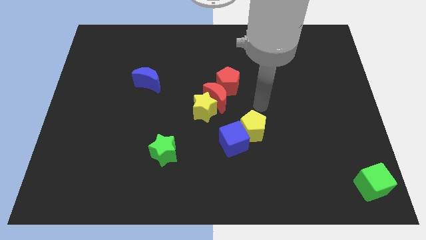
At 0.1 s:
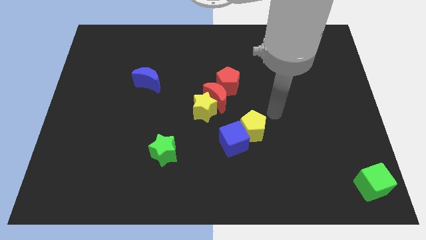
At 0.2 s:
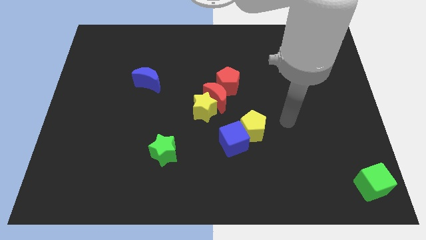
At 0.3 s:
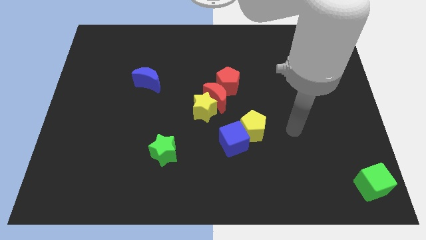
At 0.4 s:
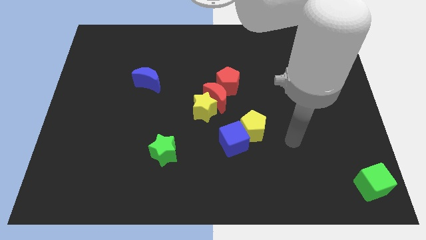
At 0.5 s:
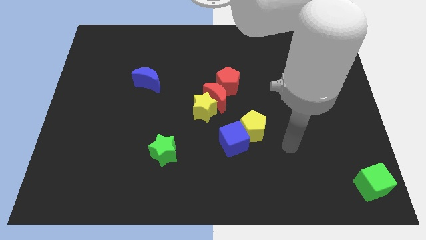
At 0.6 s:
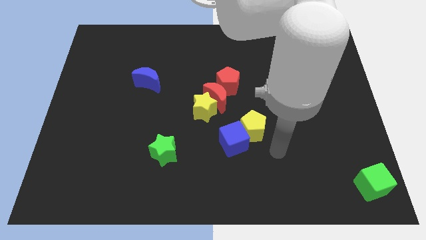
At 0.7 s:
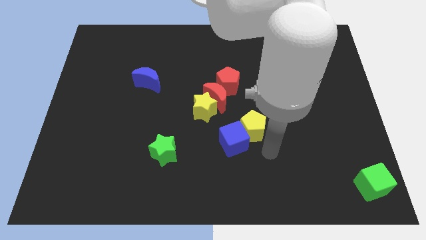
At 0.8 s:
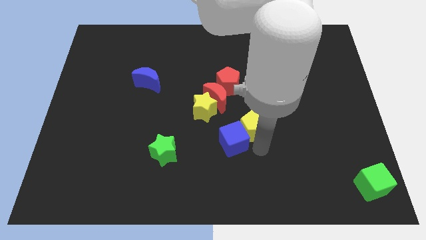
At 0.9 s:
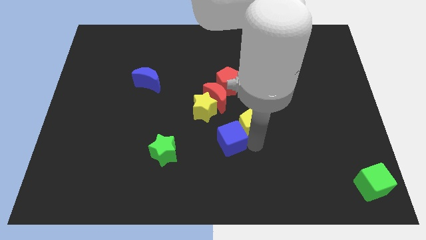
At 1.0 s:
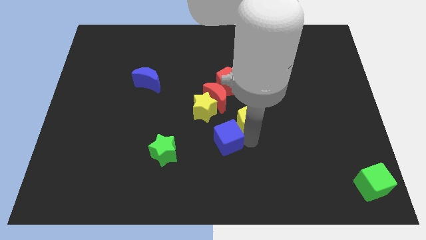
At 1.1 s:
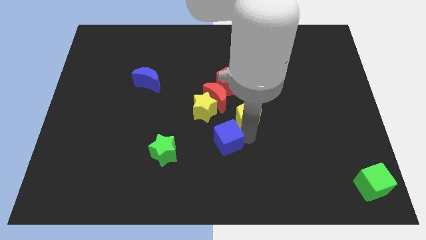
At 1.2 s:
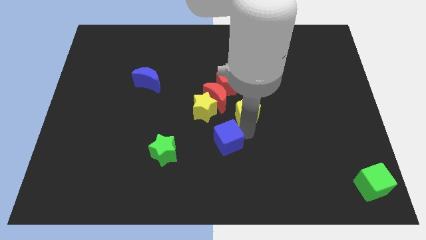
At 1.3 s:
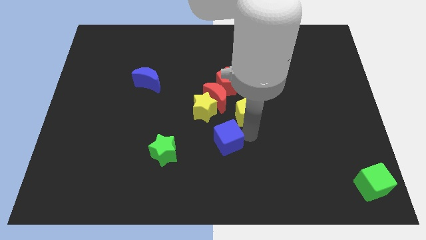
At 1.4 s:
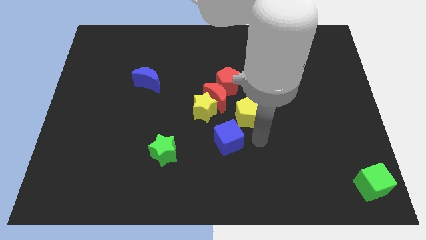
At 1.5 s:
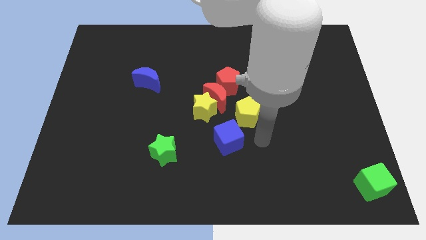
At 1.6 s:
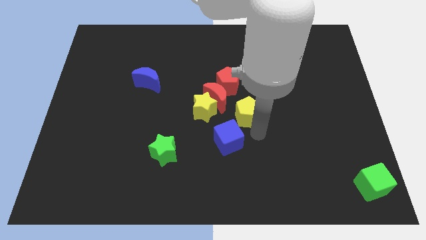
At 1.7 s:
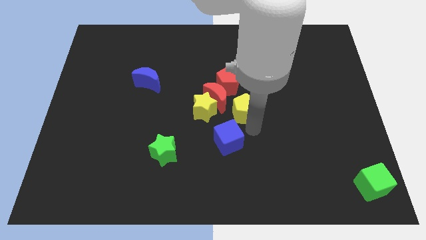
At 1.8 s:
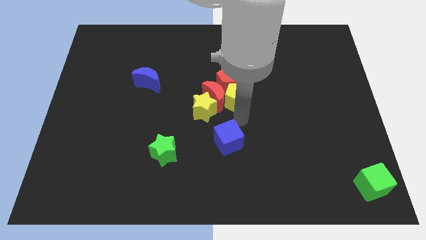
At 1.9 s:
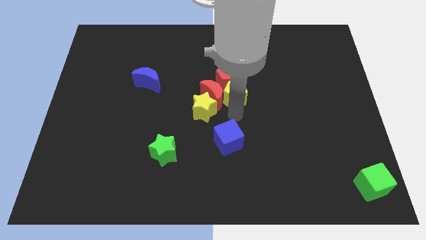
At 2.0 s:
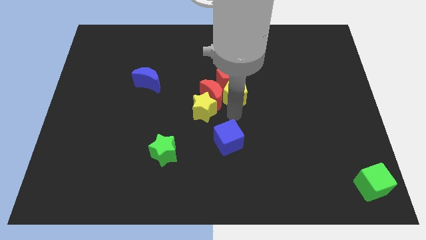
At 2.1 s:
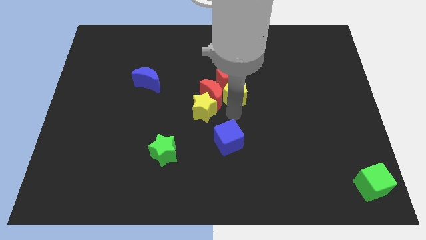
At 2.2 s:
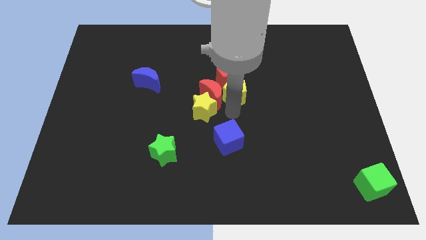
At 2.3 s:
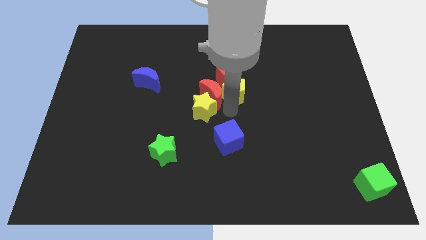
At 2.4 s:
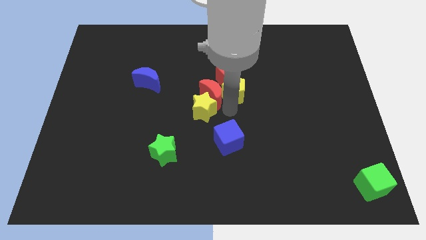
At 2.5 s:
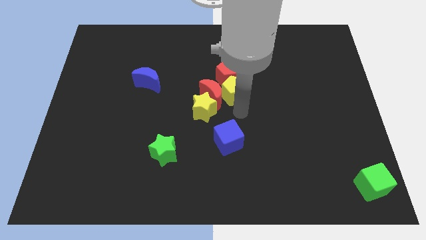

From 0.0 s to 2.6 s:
push the yellow pentagon into the red pentagon

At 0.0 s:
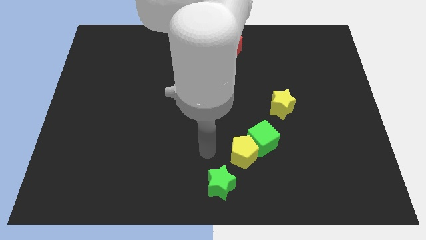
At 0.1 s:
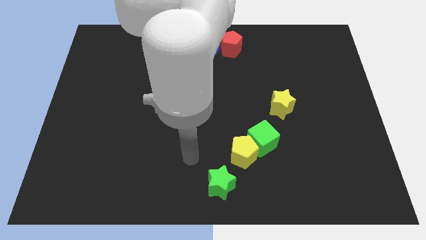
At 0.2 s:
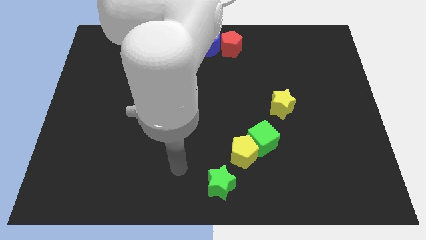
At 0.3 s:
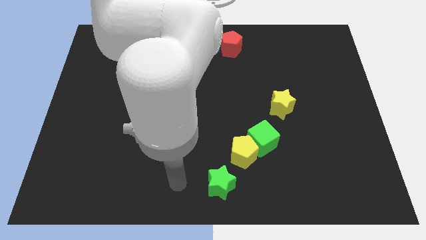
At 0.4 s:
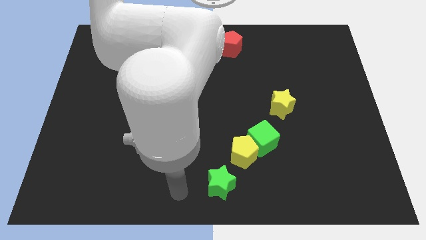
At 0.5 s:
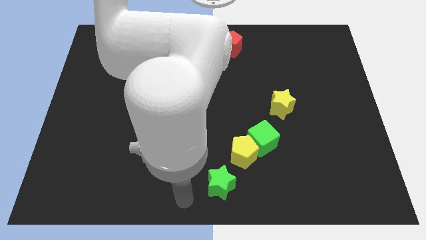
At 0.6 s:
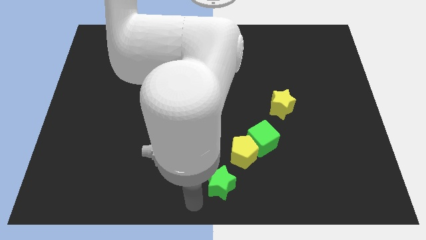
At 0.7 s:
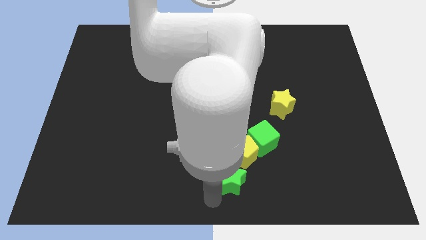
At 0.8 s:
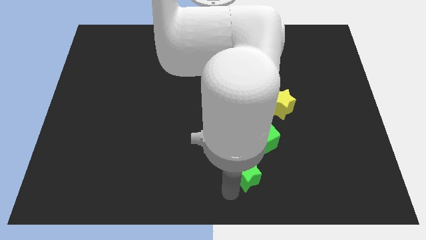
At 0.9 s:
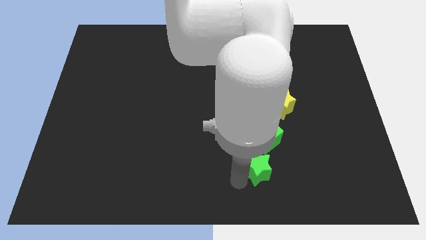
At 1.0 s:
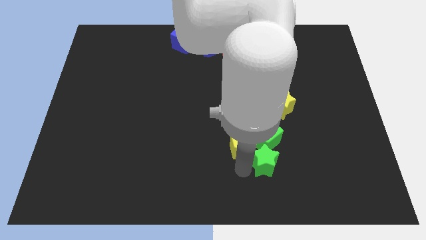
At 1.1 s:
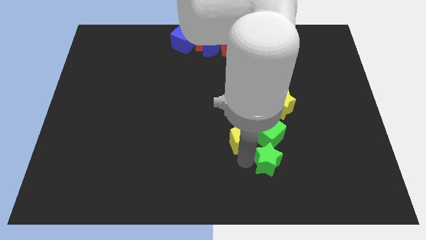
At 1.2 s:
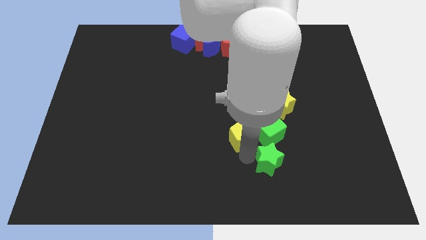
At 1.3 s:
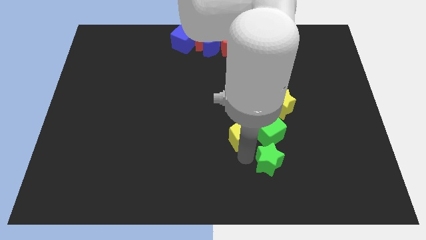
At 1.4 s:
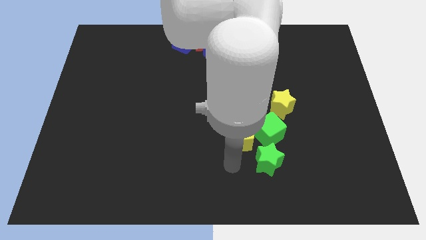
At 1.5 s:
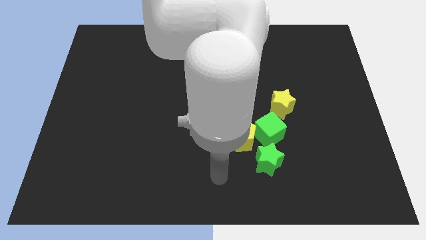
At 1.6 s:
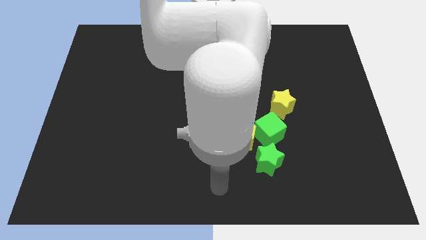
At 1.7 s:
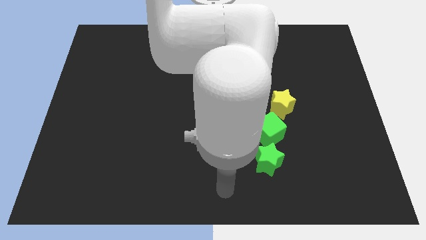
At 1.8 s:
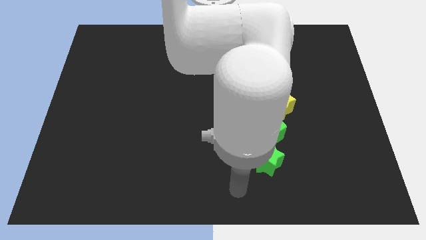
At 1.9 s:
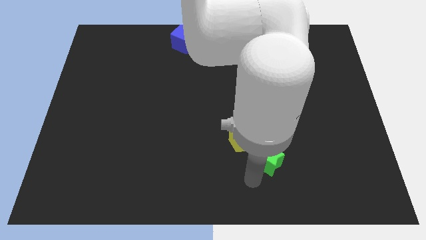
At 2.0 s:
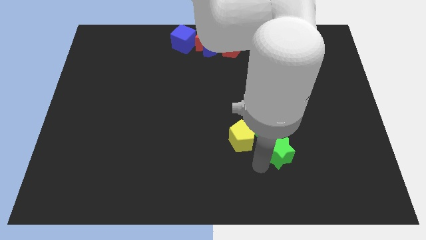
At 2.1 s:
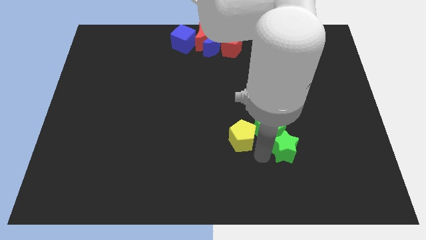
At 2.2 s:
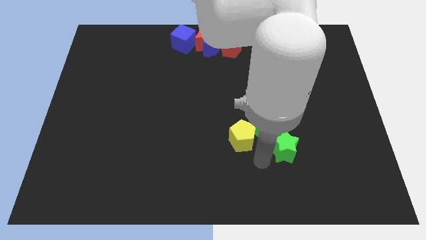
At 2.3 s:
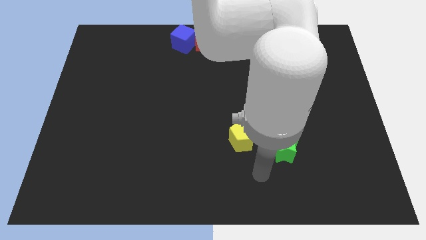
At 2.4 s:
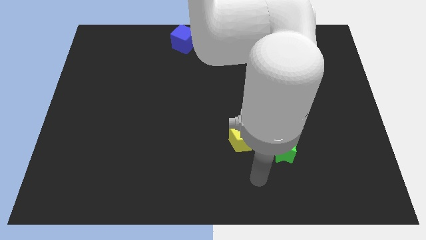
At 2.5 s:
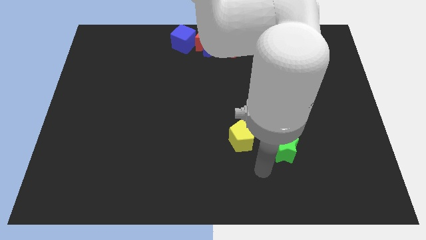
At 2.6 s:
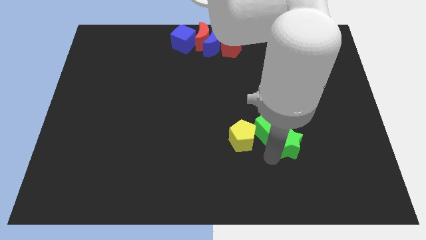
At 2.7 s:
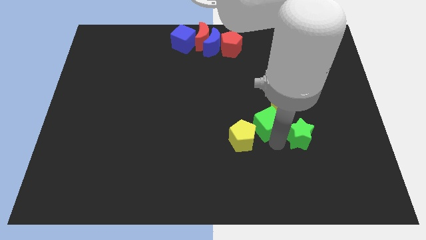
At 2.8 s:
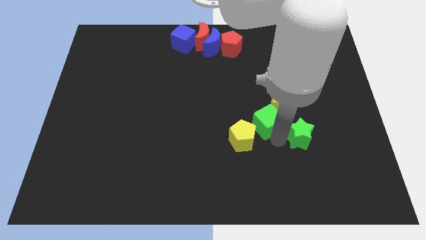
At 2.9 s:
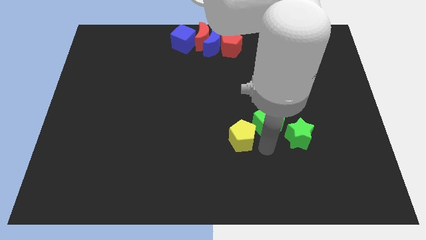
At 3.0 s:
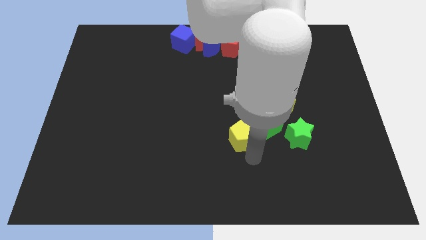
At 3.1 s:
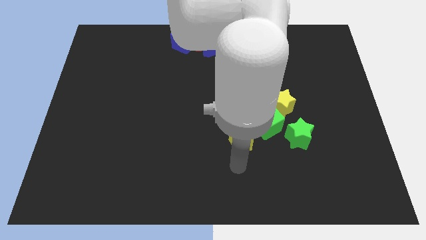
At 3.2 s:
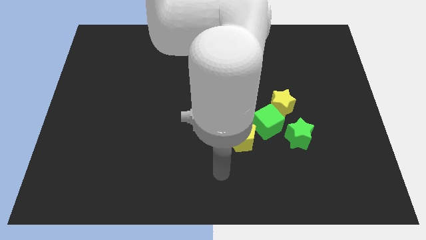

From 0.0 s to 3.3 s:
push green star into group of blocks

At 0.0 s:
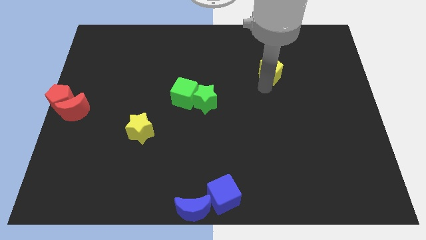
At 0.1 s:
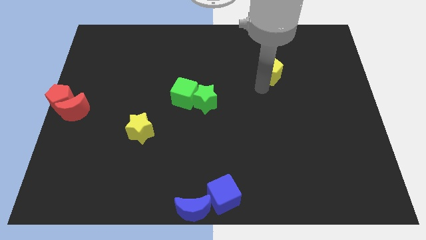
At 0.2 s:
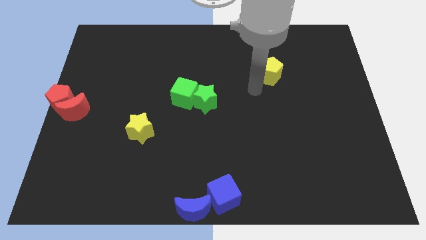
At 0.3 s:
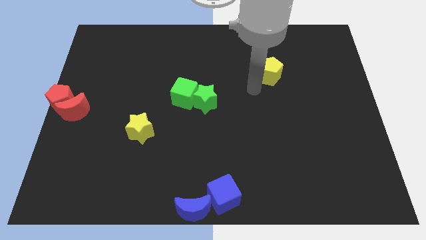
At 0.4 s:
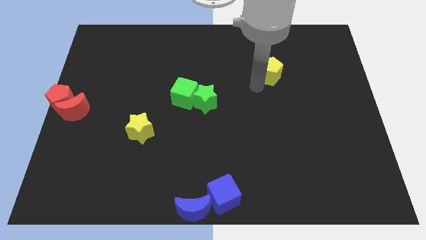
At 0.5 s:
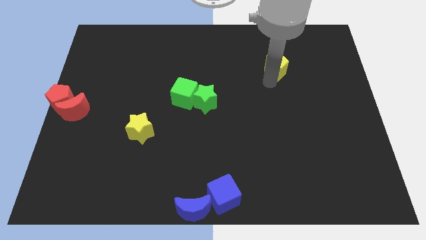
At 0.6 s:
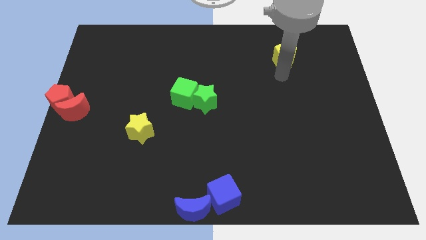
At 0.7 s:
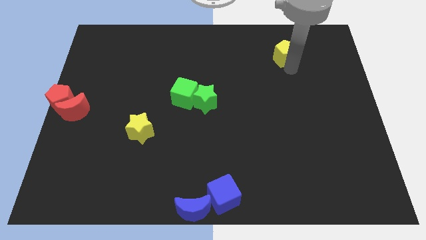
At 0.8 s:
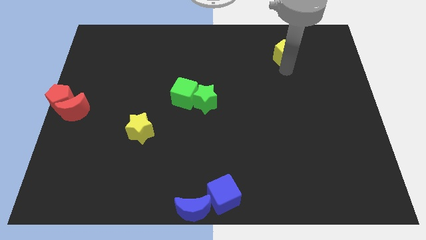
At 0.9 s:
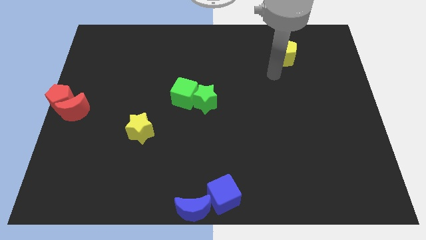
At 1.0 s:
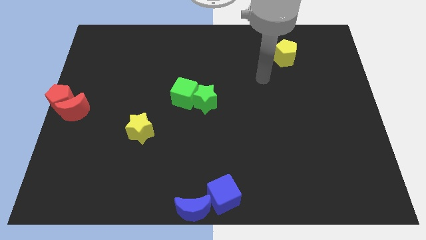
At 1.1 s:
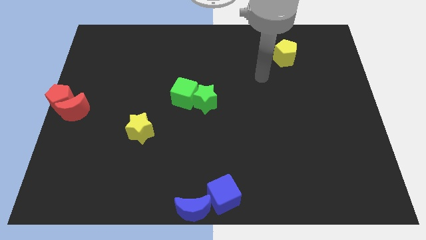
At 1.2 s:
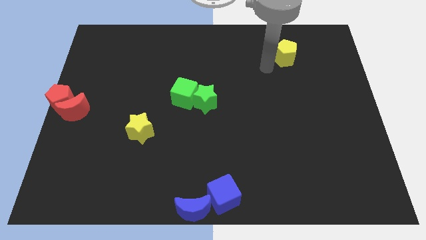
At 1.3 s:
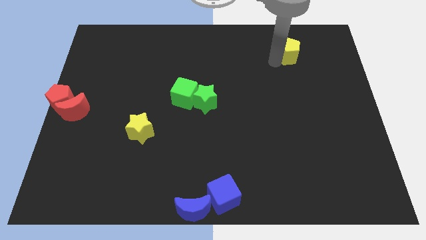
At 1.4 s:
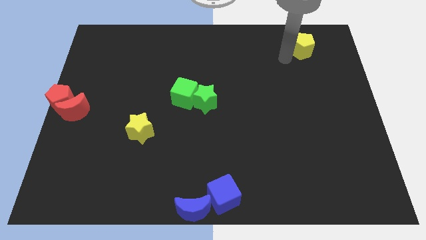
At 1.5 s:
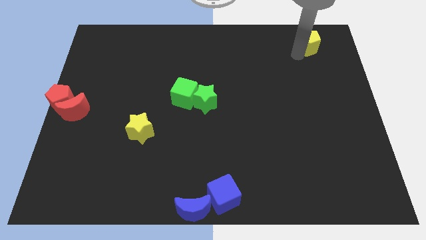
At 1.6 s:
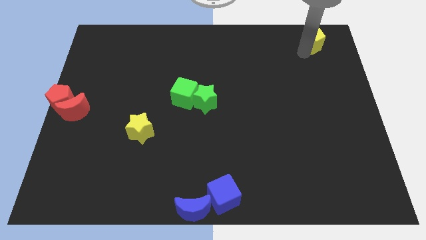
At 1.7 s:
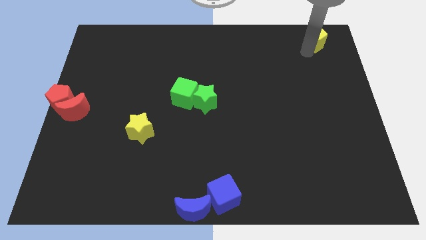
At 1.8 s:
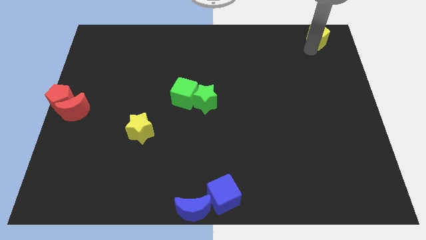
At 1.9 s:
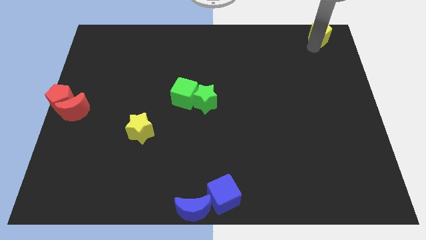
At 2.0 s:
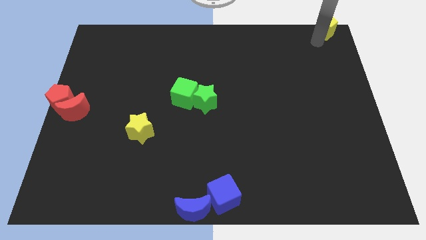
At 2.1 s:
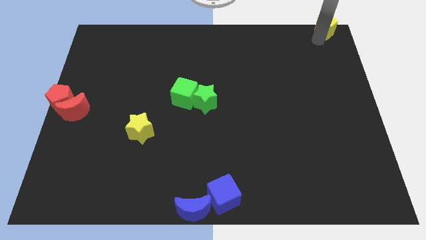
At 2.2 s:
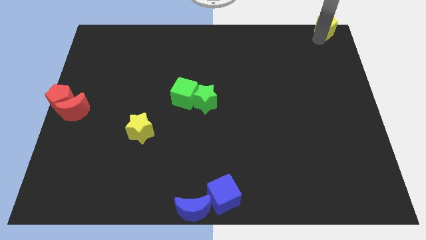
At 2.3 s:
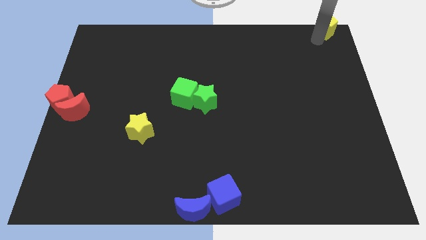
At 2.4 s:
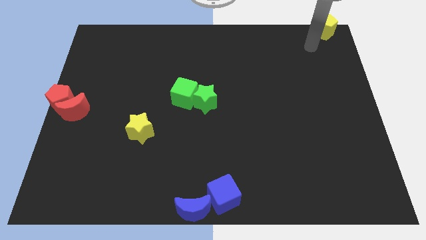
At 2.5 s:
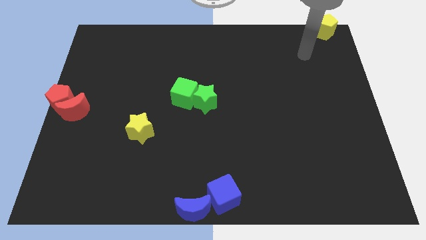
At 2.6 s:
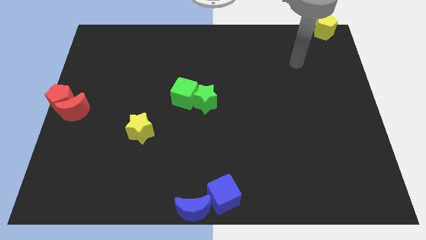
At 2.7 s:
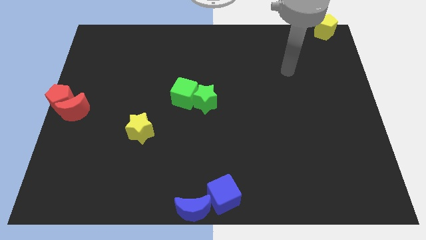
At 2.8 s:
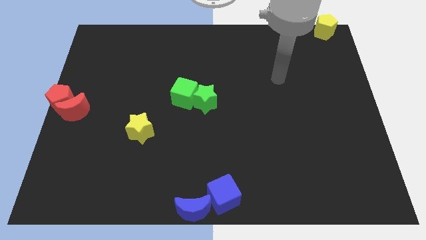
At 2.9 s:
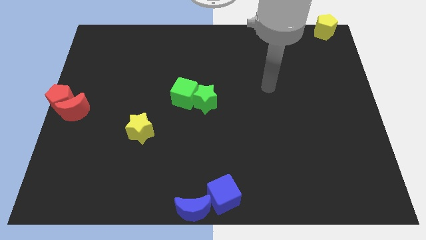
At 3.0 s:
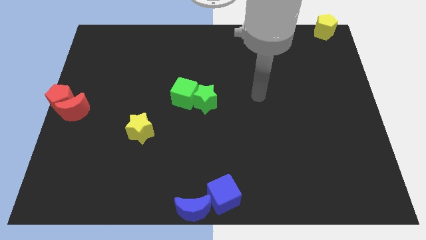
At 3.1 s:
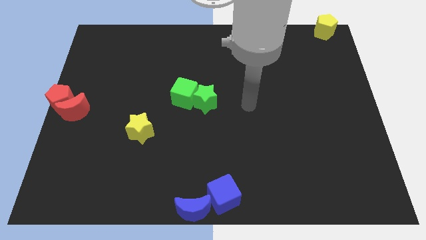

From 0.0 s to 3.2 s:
push the yellow pentagon to the top right corner of the board

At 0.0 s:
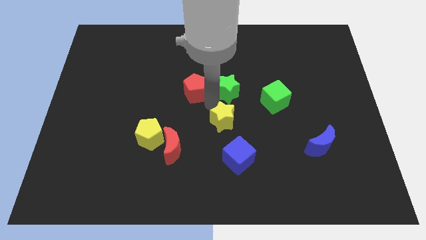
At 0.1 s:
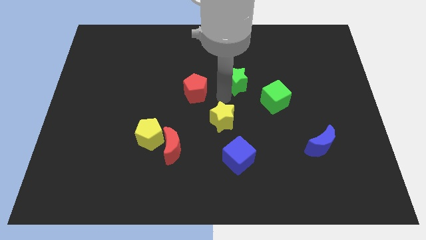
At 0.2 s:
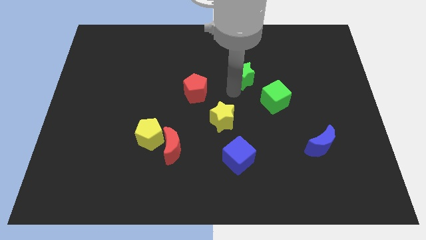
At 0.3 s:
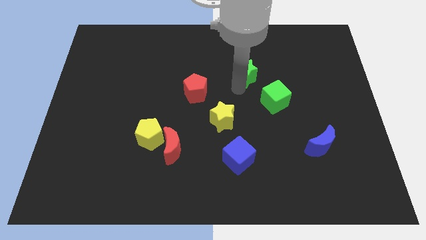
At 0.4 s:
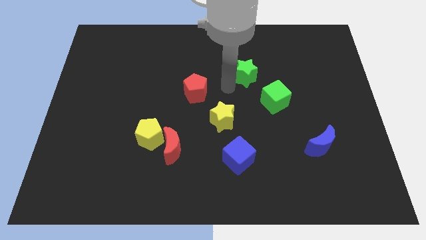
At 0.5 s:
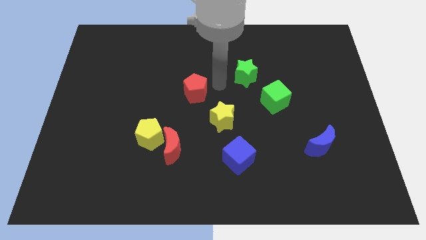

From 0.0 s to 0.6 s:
separate green star from red pentagon
